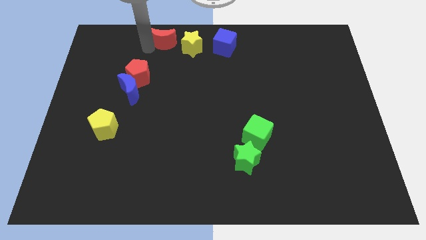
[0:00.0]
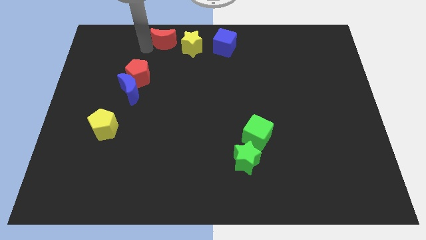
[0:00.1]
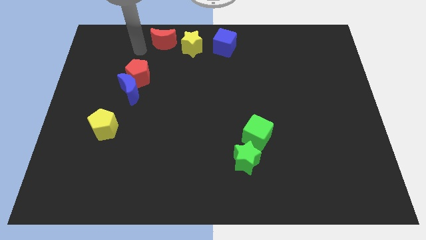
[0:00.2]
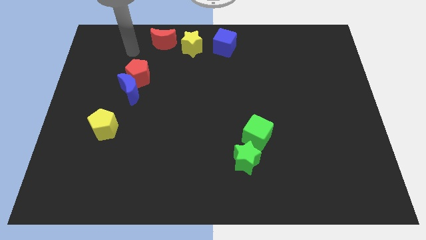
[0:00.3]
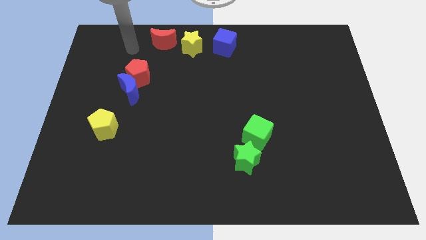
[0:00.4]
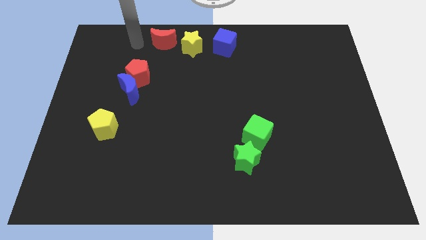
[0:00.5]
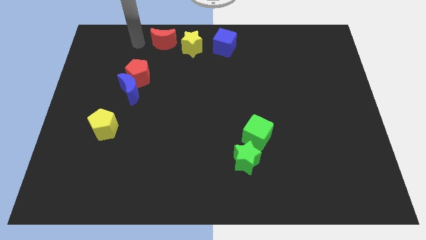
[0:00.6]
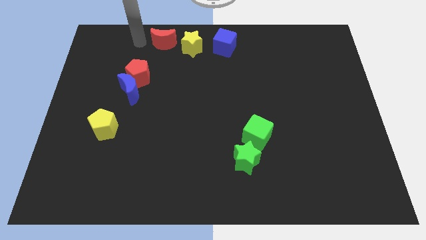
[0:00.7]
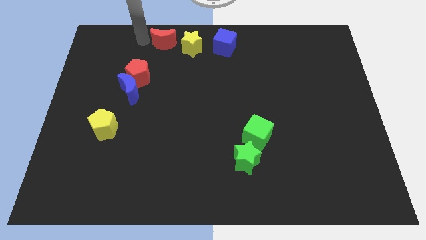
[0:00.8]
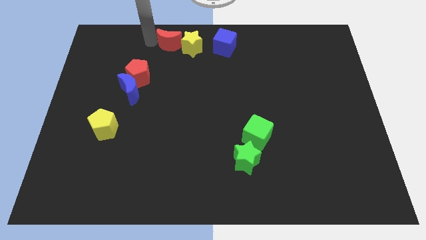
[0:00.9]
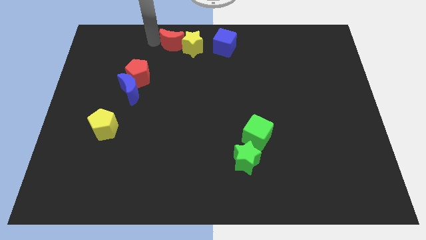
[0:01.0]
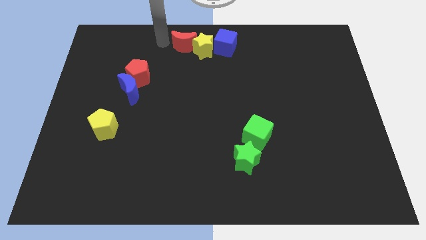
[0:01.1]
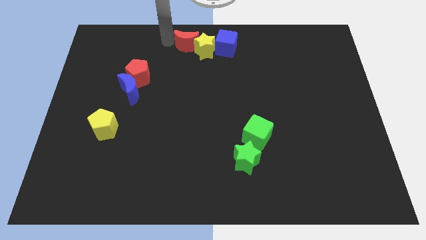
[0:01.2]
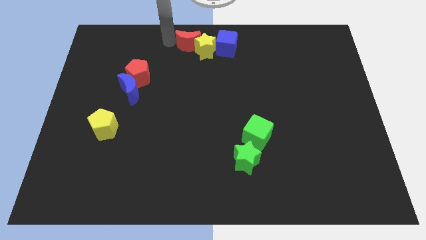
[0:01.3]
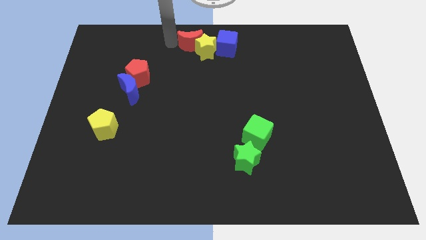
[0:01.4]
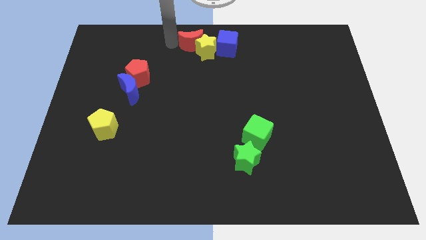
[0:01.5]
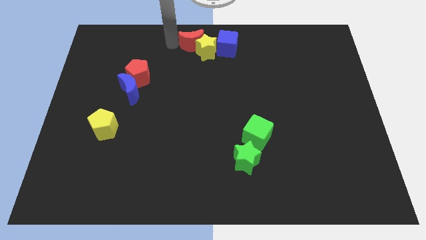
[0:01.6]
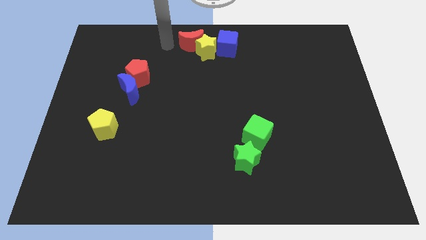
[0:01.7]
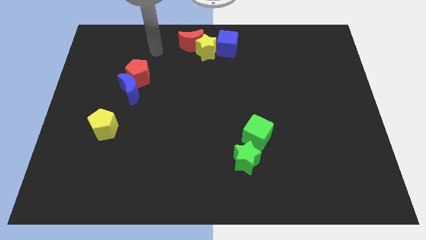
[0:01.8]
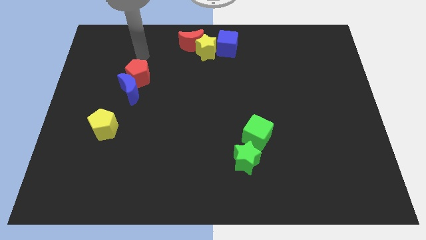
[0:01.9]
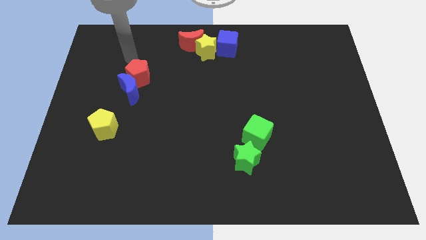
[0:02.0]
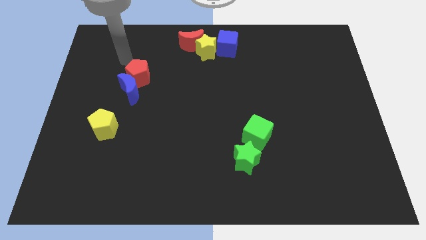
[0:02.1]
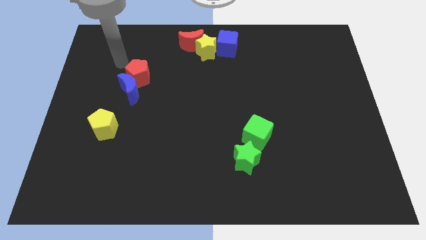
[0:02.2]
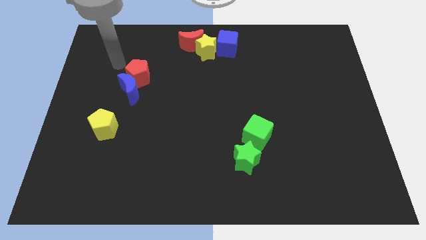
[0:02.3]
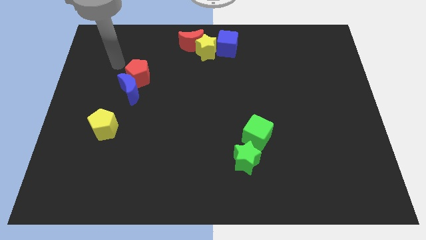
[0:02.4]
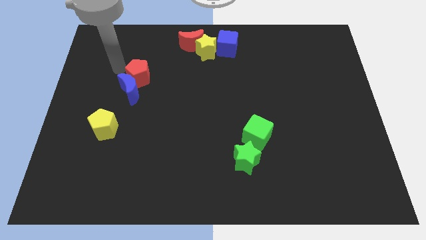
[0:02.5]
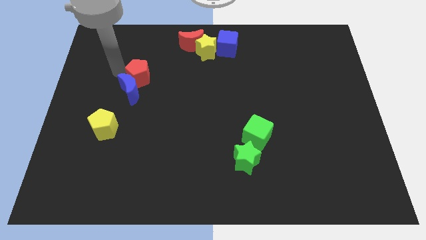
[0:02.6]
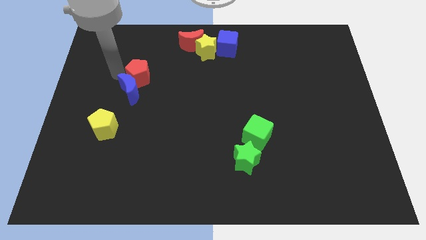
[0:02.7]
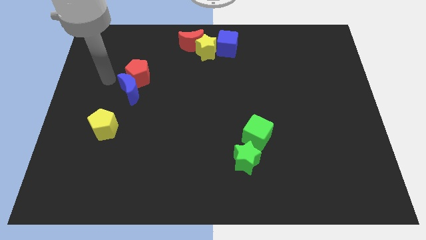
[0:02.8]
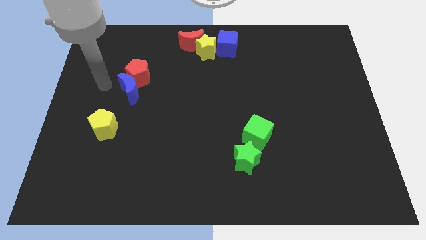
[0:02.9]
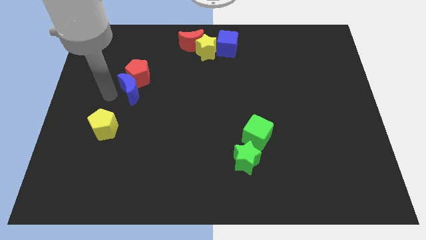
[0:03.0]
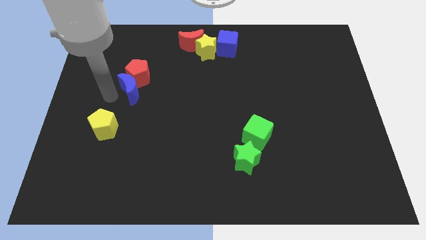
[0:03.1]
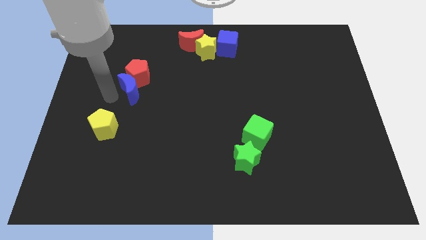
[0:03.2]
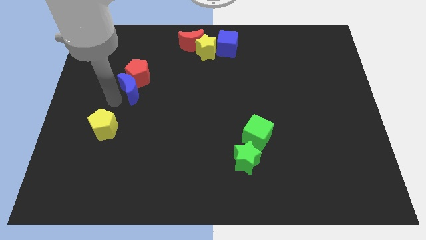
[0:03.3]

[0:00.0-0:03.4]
move the yellow star and red crescent into the blue cube

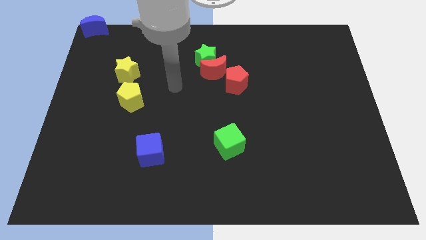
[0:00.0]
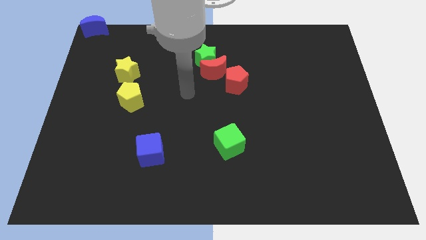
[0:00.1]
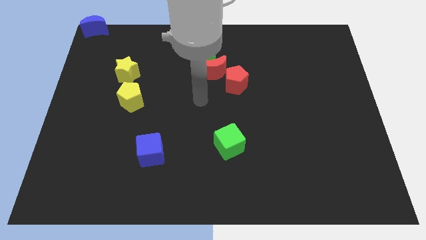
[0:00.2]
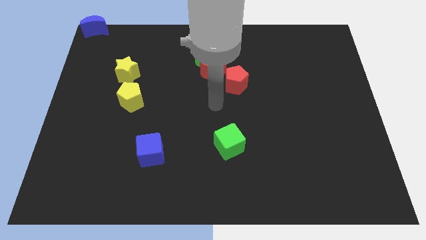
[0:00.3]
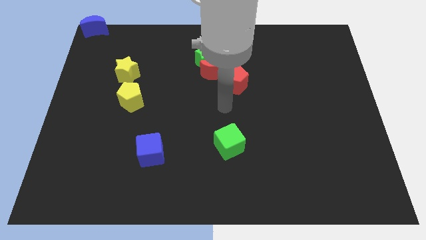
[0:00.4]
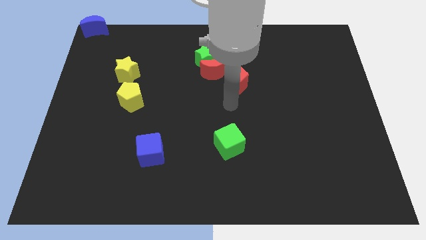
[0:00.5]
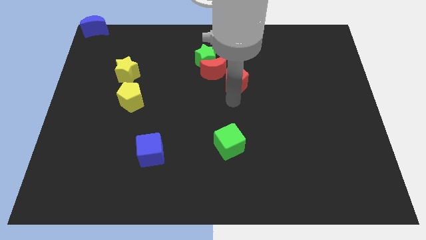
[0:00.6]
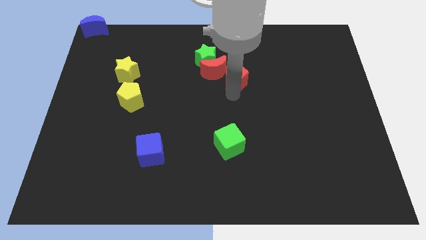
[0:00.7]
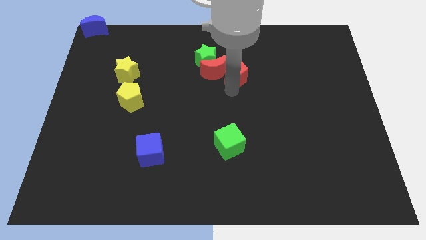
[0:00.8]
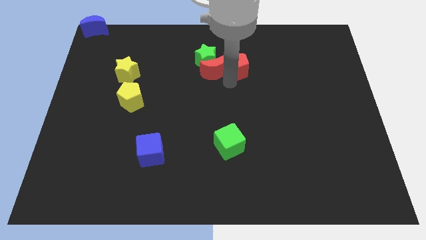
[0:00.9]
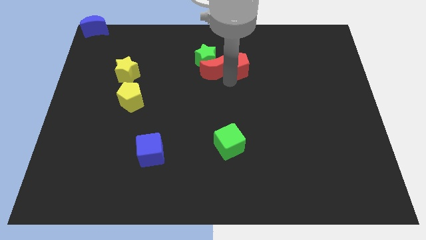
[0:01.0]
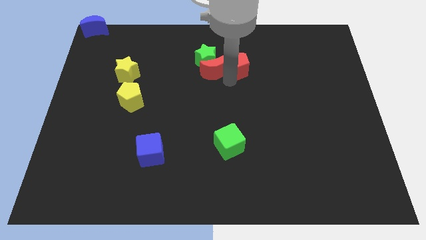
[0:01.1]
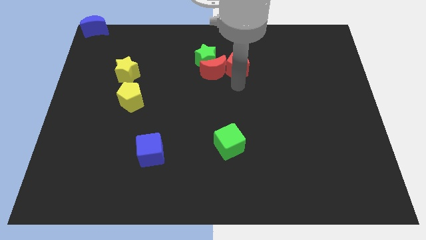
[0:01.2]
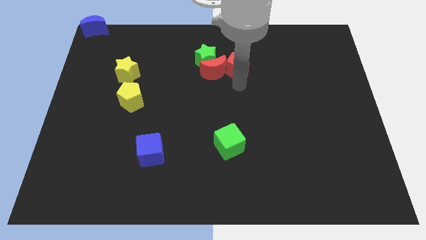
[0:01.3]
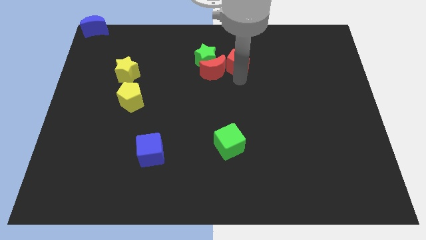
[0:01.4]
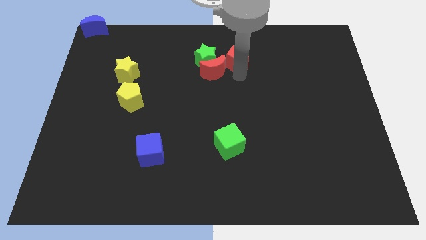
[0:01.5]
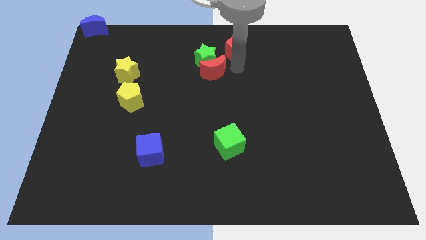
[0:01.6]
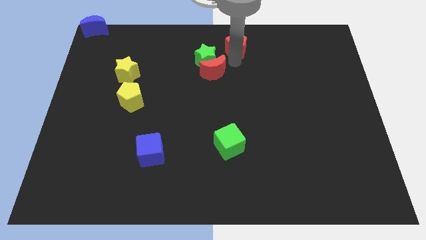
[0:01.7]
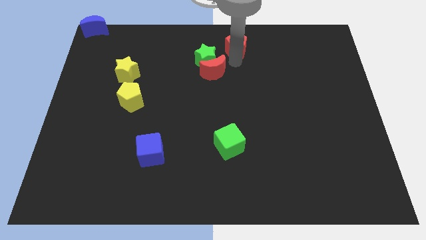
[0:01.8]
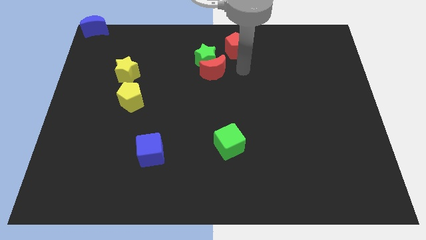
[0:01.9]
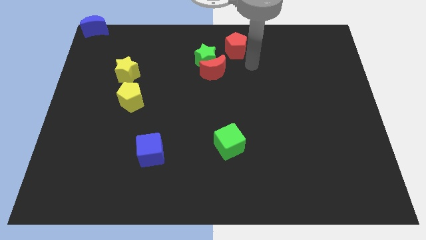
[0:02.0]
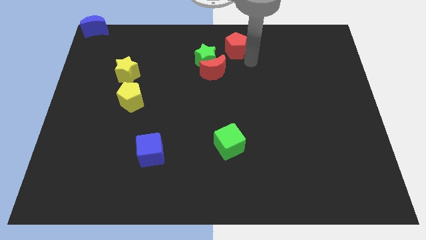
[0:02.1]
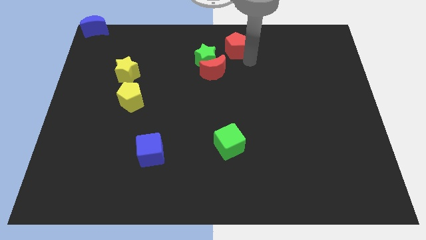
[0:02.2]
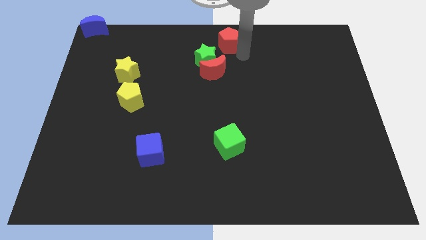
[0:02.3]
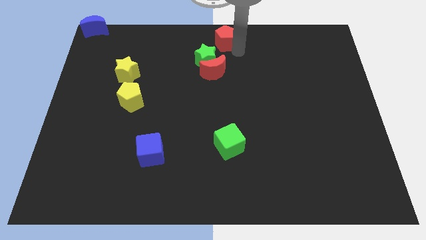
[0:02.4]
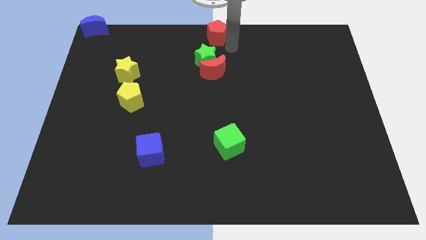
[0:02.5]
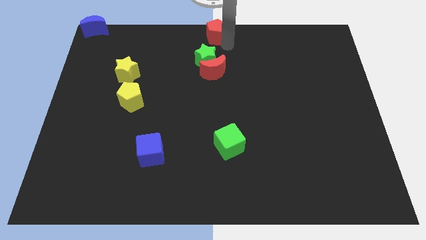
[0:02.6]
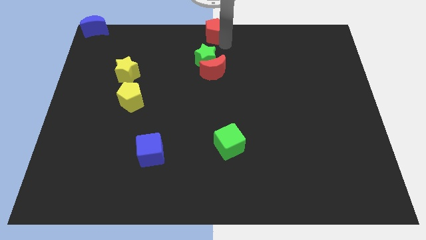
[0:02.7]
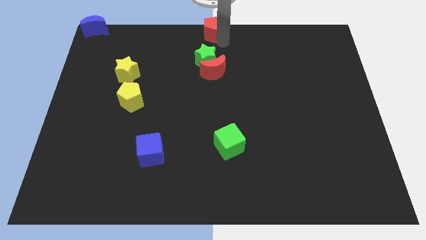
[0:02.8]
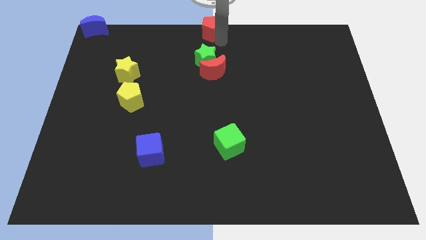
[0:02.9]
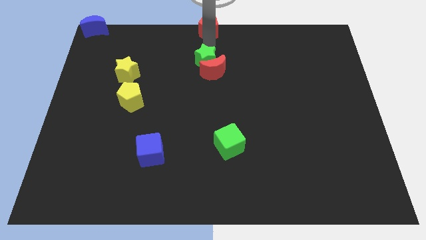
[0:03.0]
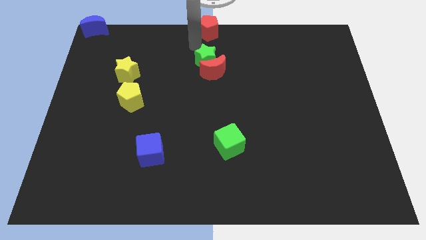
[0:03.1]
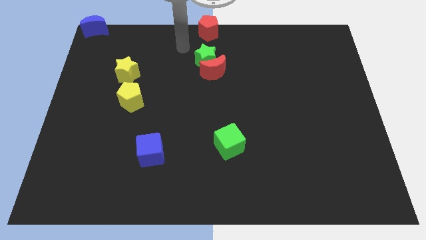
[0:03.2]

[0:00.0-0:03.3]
place the red pentagon at the top center of the board

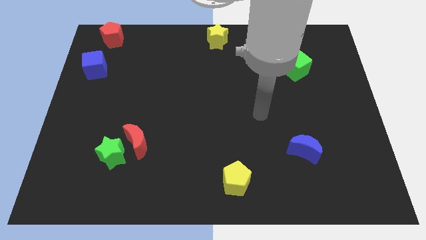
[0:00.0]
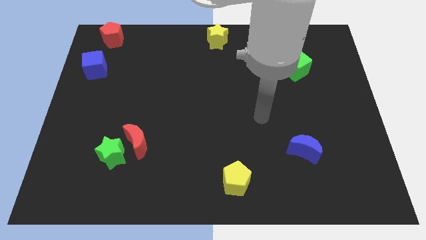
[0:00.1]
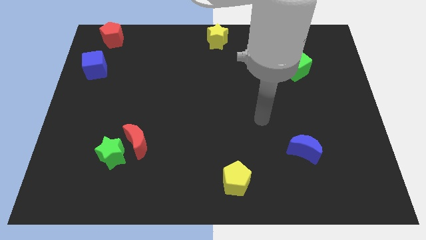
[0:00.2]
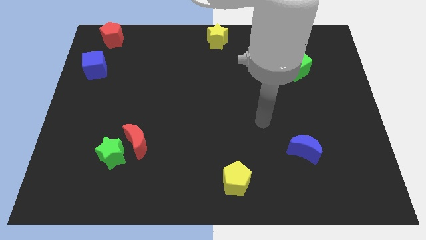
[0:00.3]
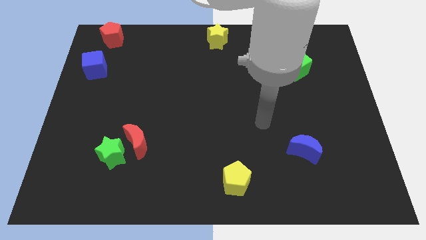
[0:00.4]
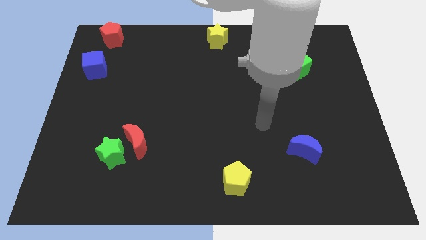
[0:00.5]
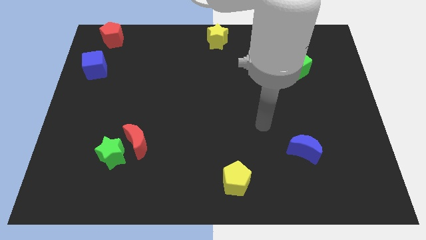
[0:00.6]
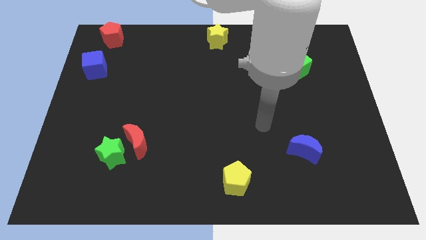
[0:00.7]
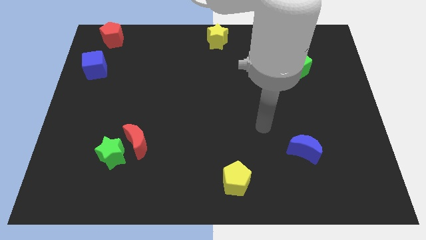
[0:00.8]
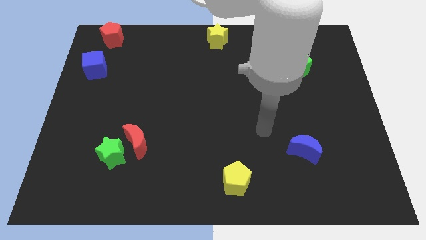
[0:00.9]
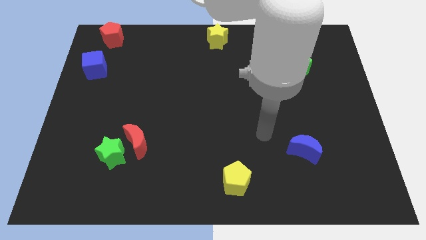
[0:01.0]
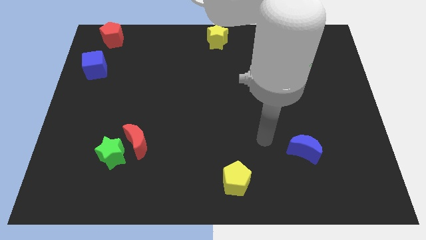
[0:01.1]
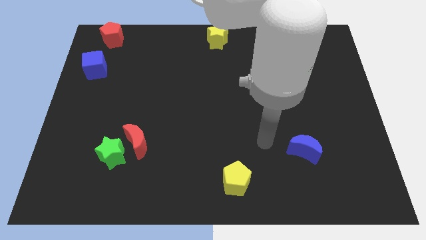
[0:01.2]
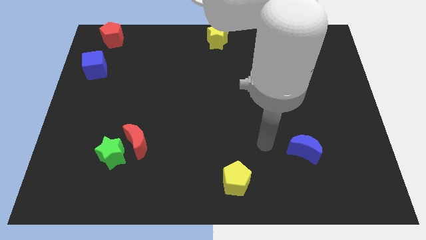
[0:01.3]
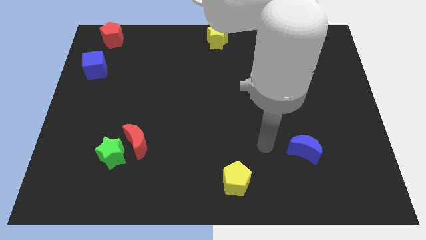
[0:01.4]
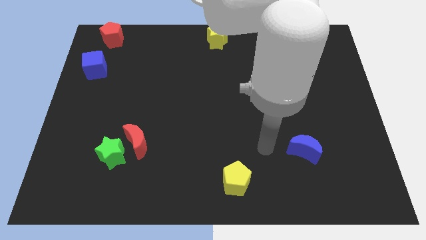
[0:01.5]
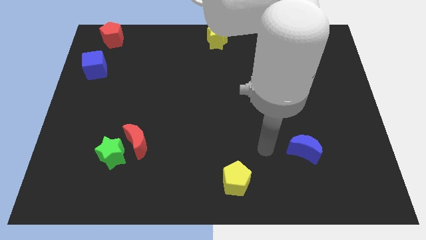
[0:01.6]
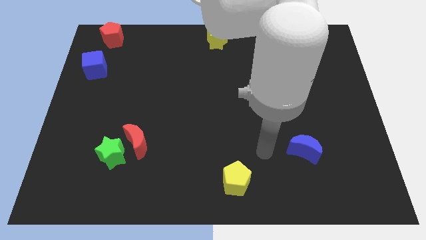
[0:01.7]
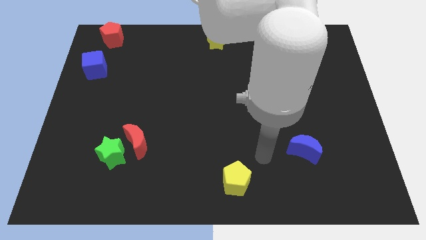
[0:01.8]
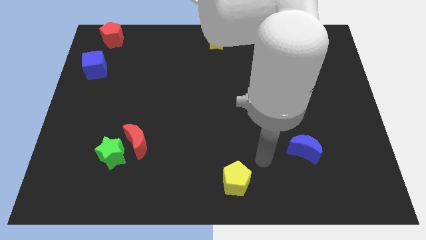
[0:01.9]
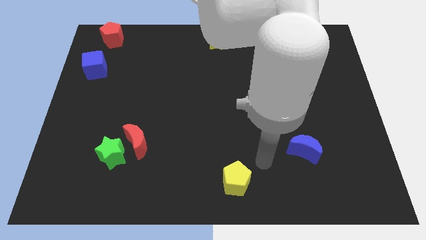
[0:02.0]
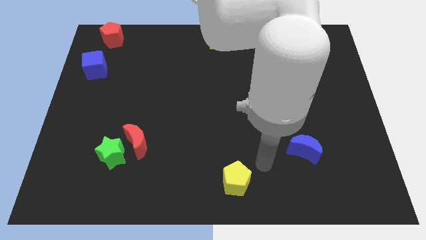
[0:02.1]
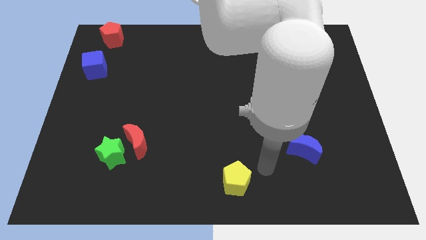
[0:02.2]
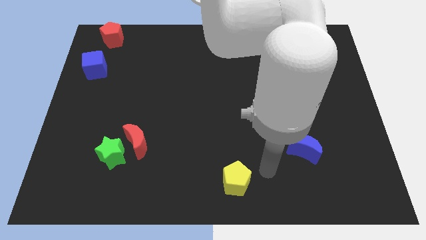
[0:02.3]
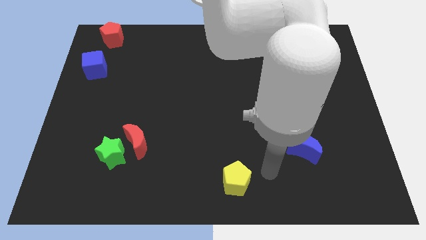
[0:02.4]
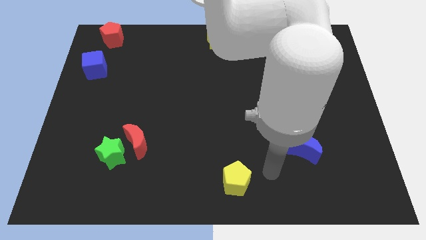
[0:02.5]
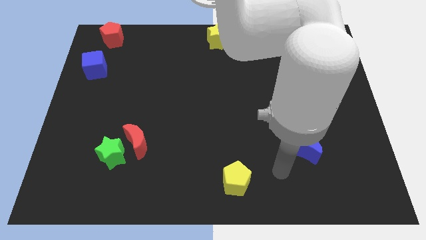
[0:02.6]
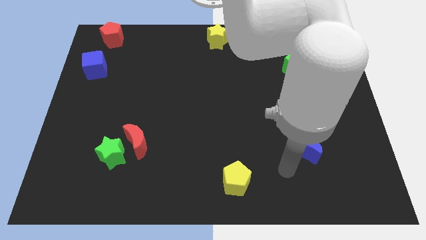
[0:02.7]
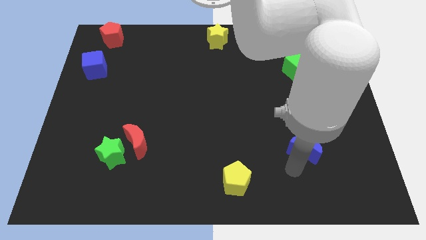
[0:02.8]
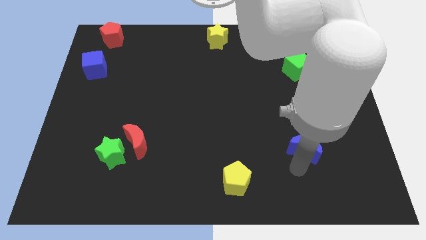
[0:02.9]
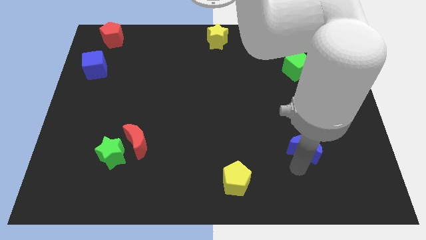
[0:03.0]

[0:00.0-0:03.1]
point your arm below blue crescent
